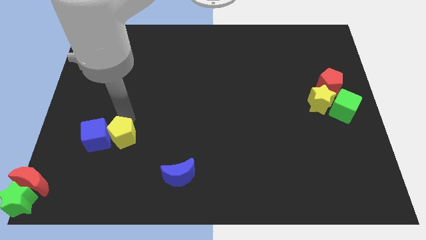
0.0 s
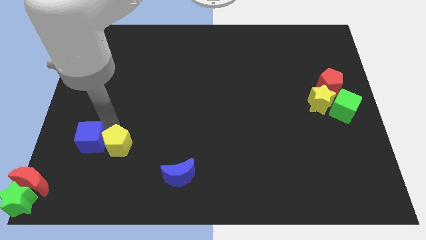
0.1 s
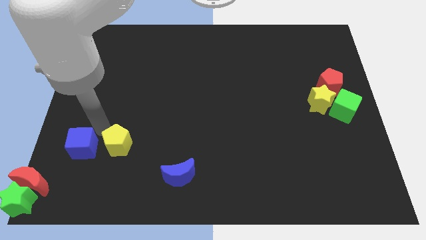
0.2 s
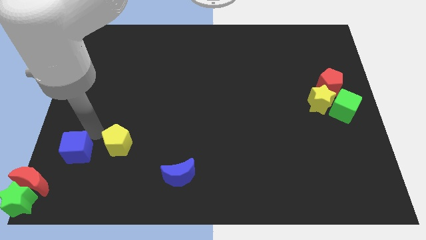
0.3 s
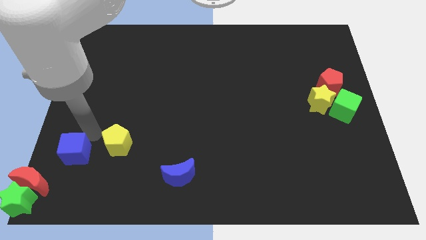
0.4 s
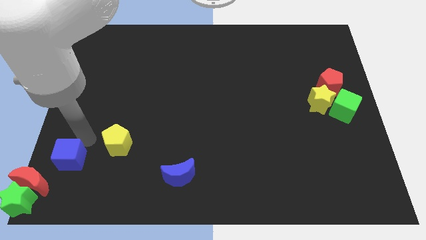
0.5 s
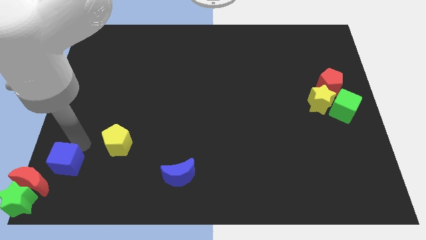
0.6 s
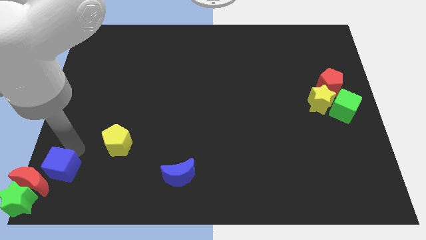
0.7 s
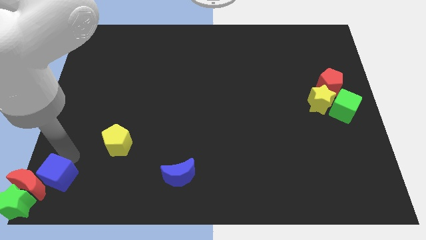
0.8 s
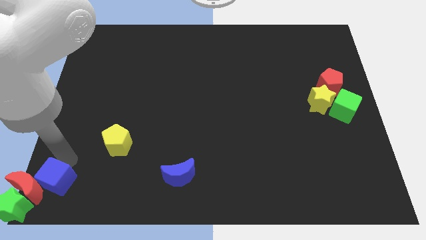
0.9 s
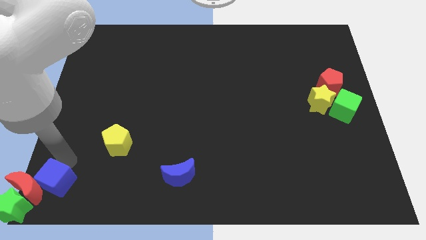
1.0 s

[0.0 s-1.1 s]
push blue cube towards red crescent

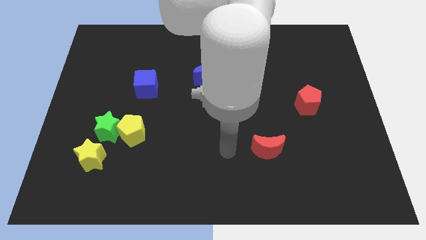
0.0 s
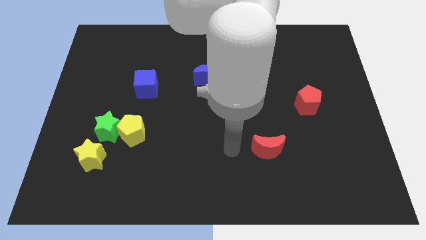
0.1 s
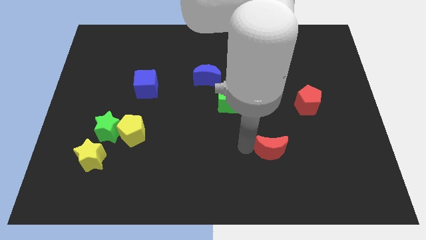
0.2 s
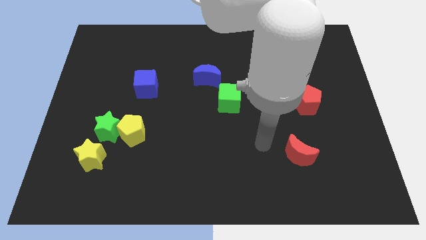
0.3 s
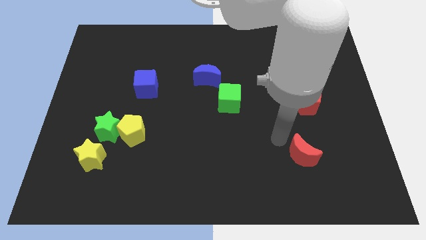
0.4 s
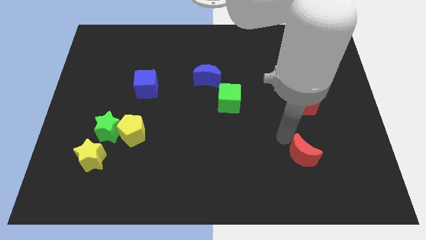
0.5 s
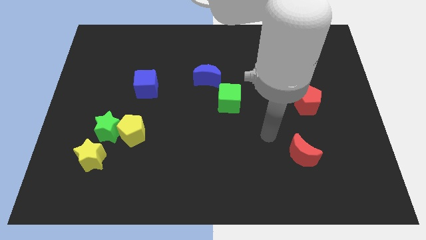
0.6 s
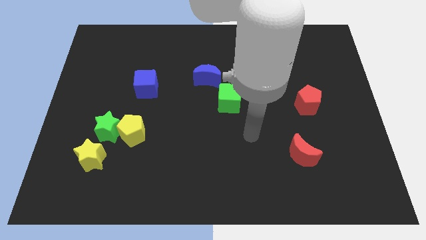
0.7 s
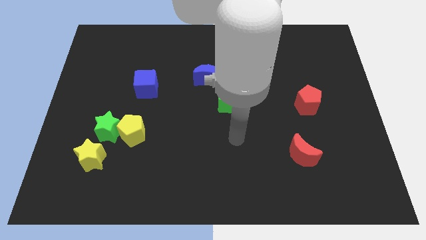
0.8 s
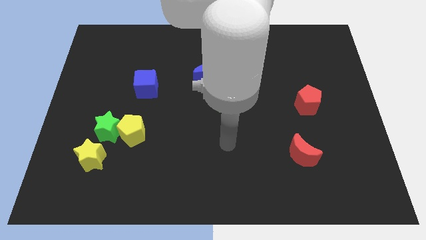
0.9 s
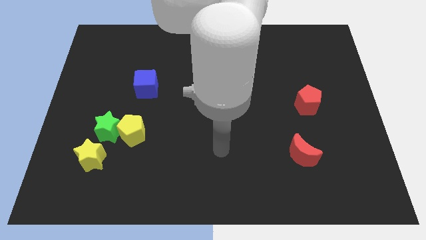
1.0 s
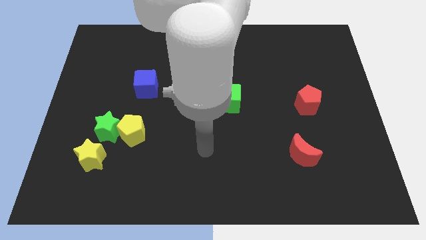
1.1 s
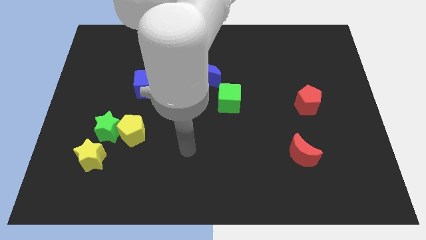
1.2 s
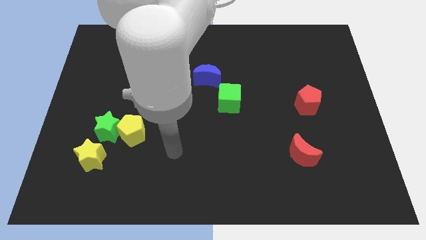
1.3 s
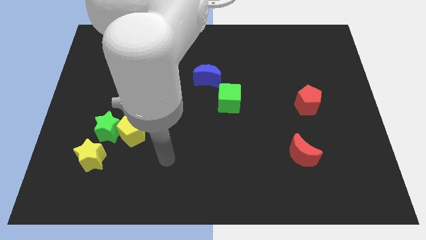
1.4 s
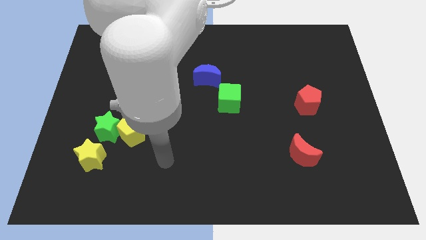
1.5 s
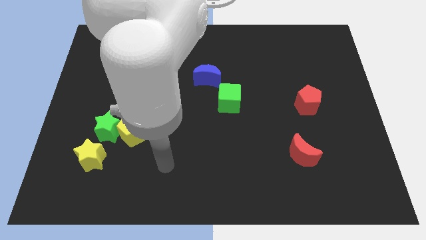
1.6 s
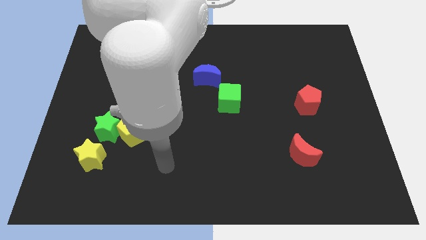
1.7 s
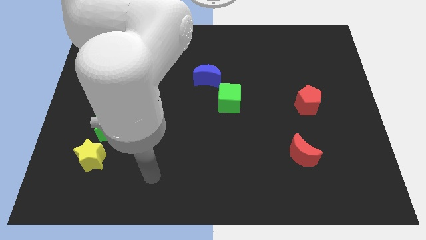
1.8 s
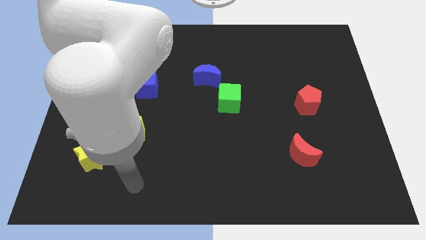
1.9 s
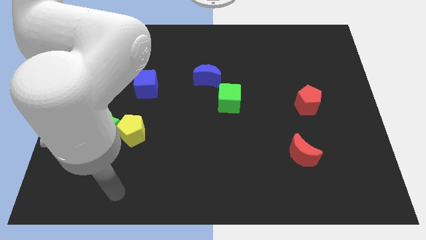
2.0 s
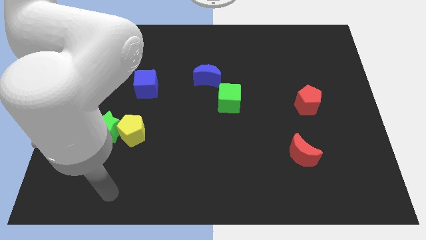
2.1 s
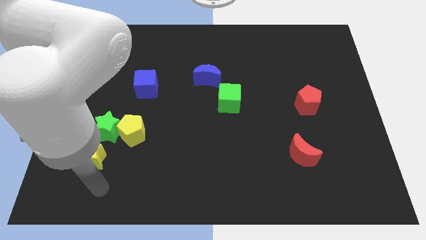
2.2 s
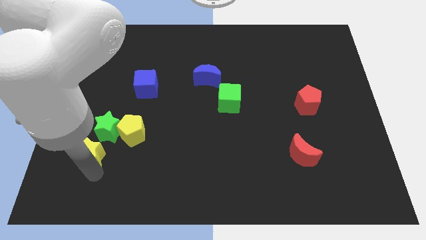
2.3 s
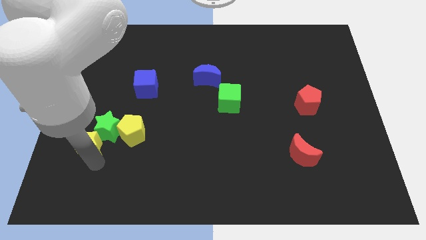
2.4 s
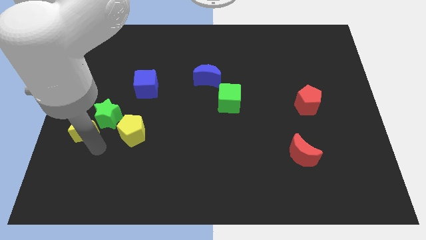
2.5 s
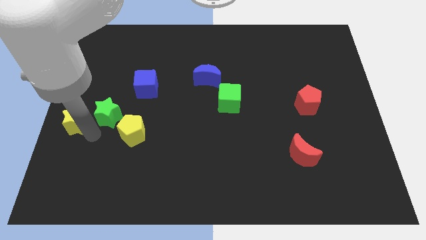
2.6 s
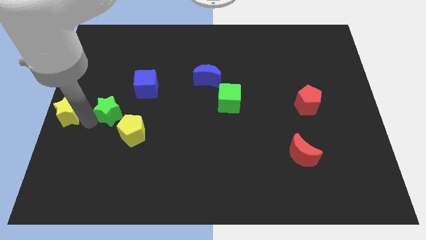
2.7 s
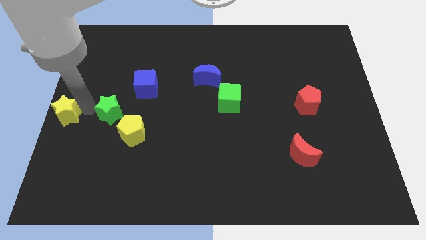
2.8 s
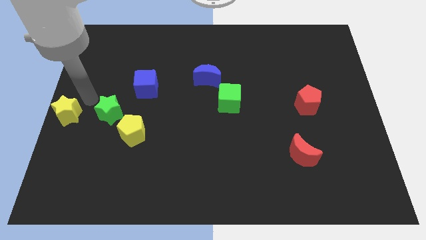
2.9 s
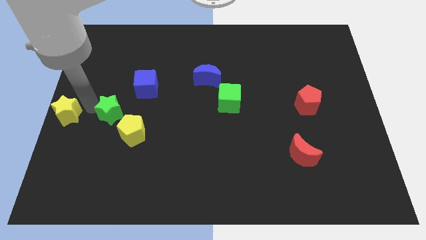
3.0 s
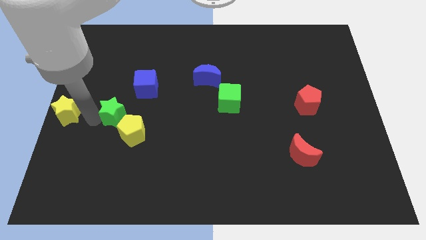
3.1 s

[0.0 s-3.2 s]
place your arm in between green star and yellow star

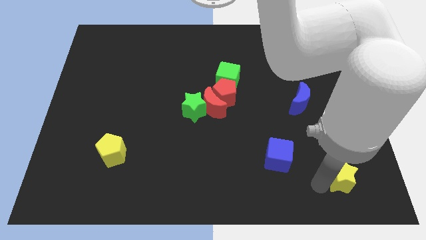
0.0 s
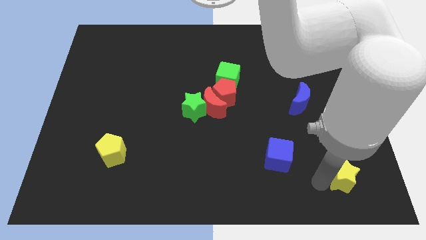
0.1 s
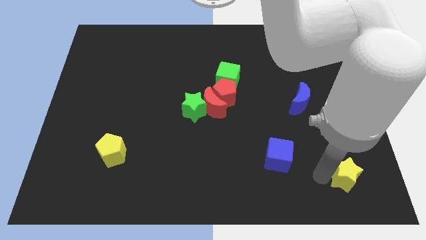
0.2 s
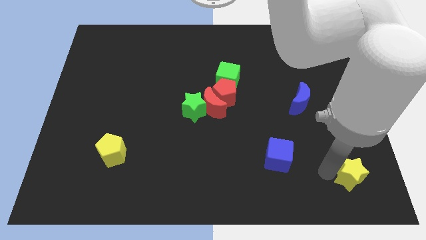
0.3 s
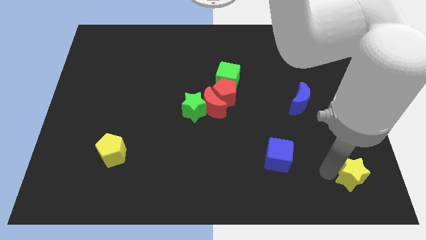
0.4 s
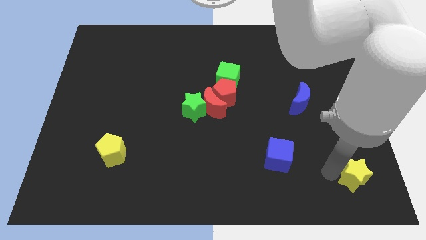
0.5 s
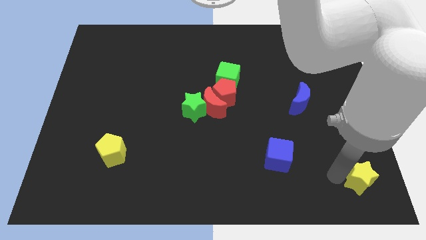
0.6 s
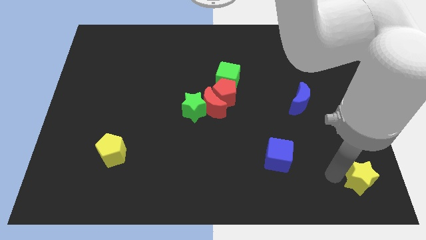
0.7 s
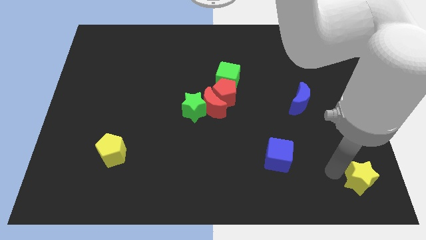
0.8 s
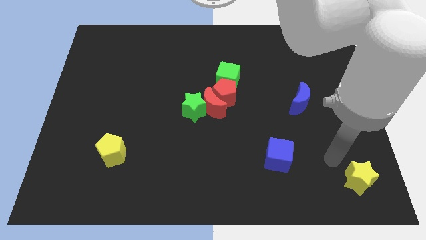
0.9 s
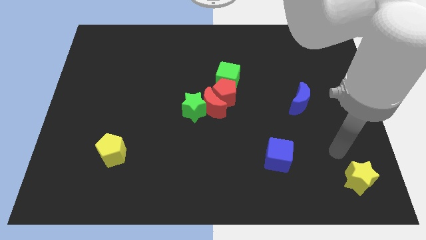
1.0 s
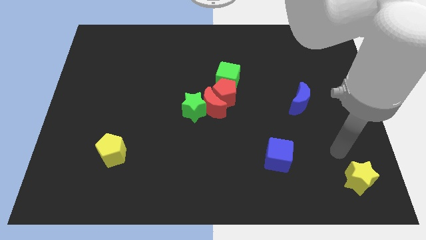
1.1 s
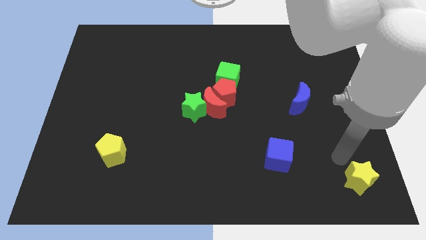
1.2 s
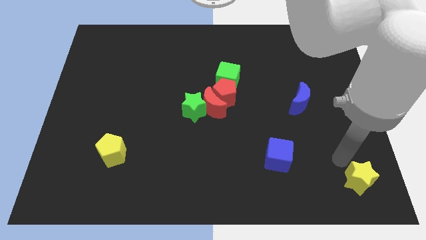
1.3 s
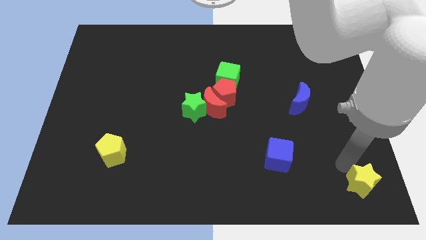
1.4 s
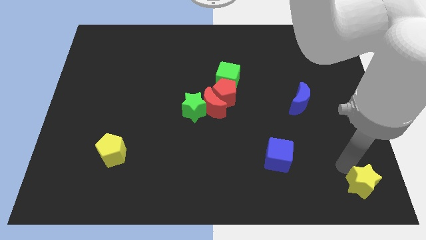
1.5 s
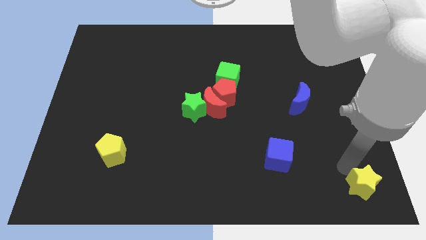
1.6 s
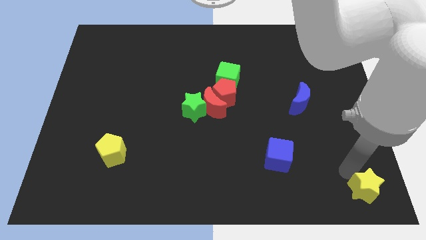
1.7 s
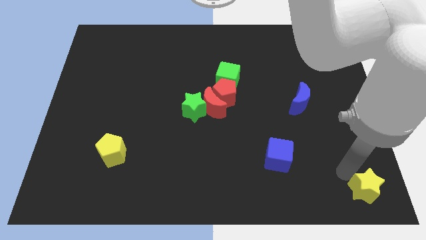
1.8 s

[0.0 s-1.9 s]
place a yellow star downwards right corner

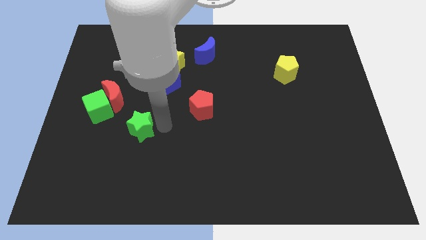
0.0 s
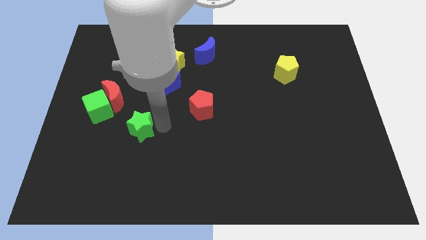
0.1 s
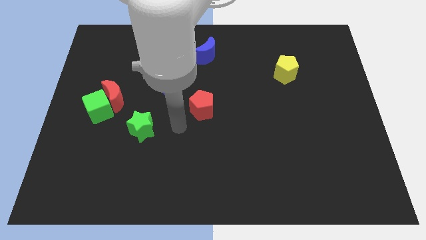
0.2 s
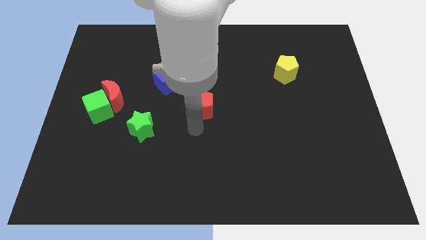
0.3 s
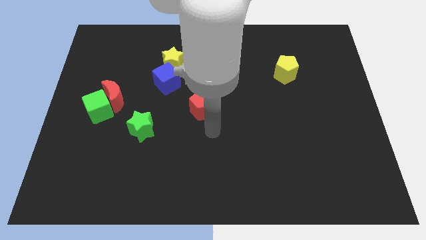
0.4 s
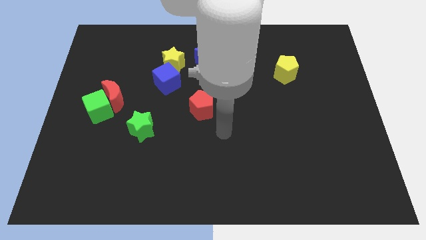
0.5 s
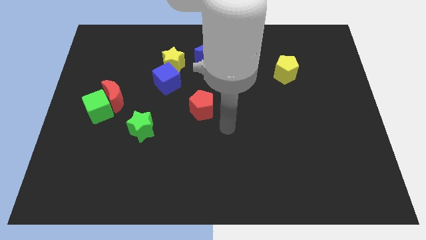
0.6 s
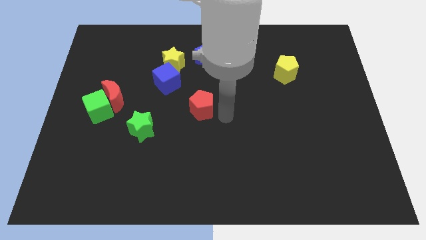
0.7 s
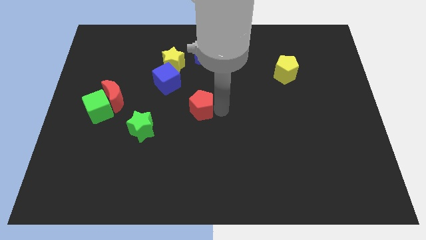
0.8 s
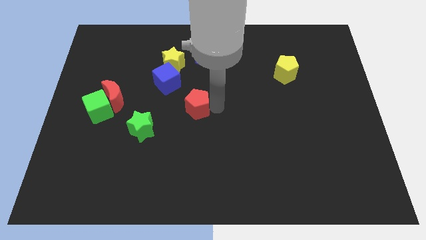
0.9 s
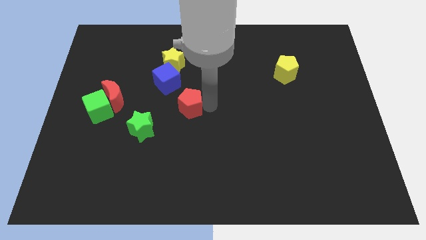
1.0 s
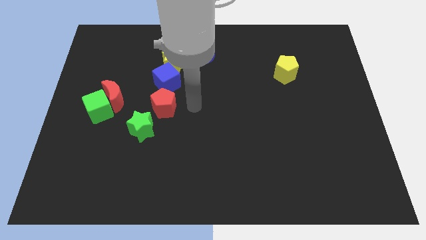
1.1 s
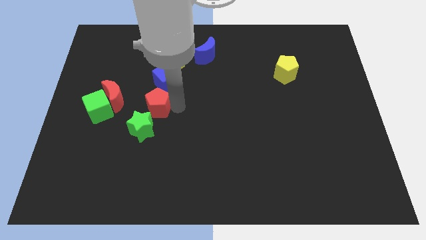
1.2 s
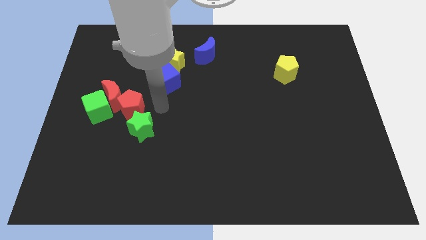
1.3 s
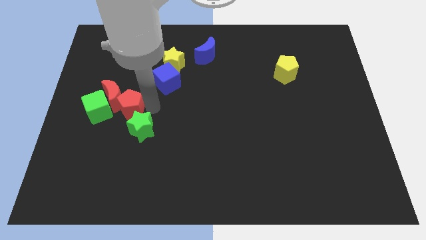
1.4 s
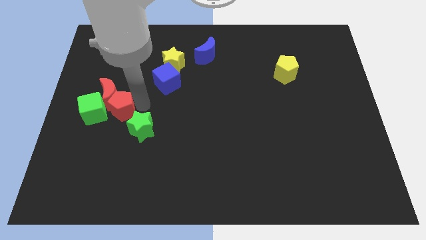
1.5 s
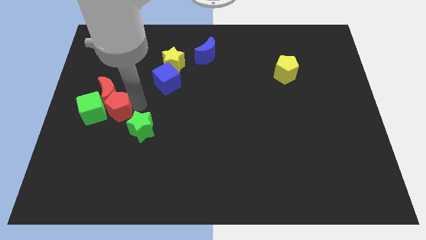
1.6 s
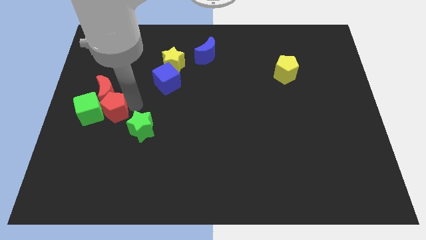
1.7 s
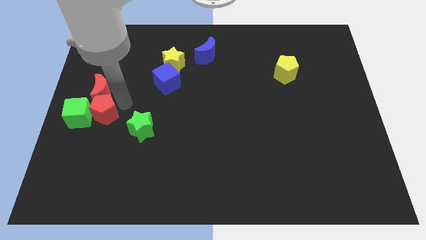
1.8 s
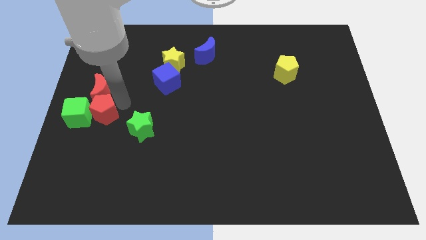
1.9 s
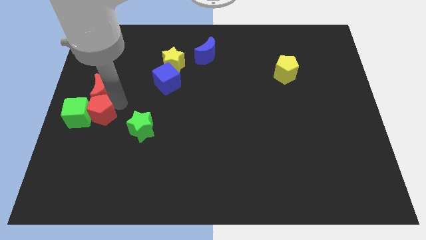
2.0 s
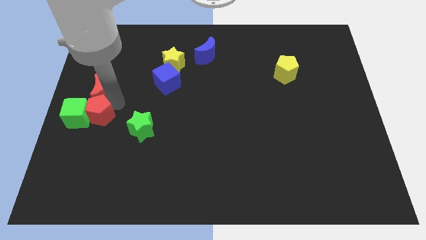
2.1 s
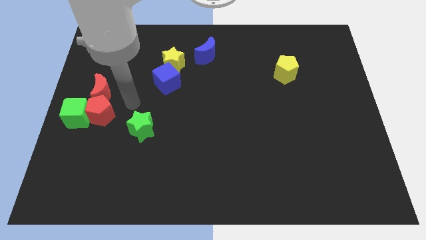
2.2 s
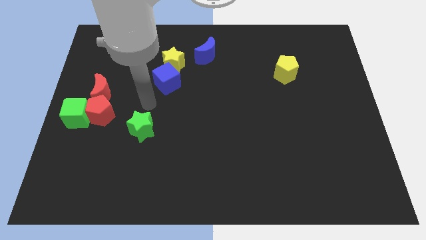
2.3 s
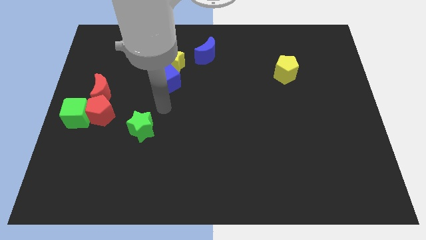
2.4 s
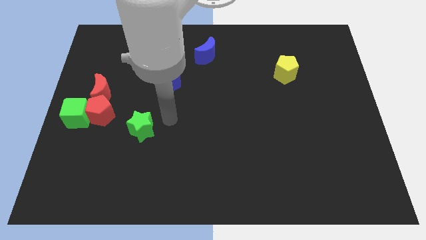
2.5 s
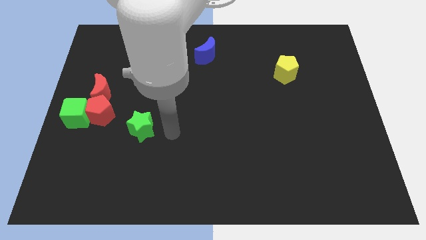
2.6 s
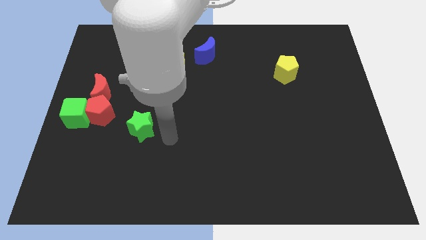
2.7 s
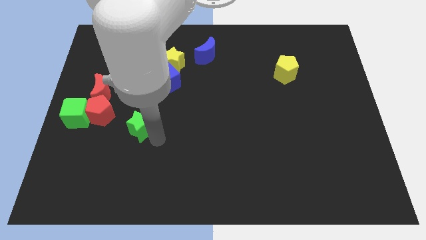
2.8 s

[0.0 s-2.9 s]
push the red pentagon into the red moon and green cube
